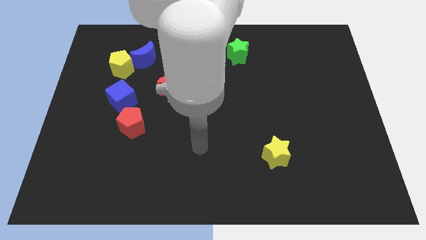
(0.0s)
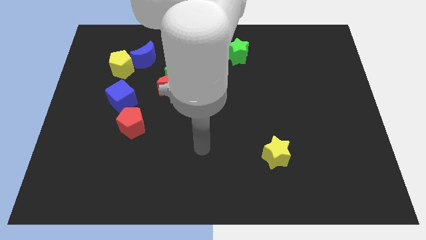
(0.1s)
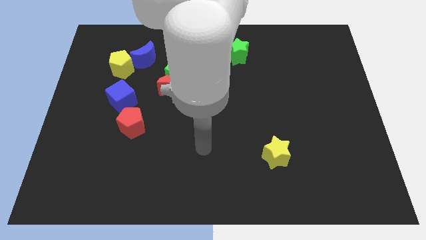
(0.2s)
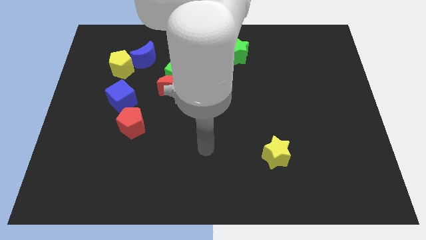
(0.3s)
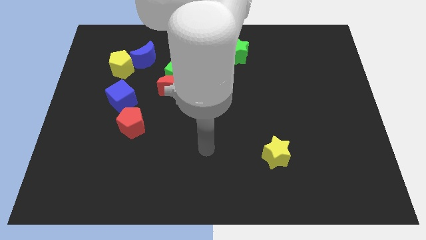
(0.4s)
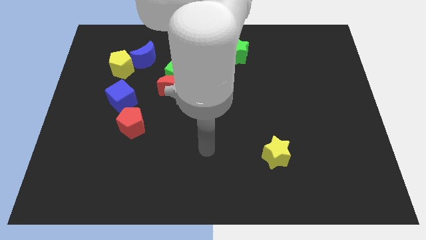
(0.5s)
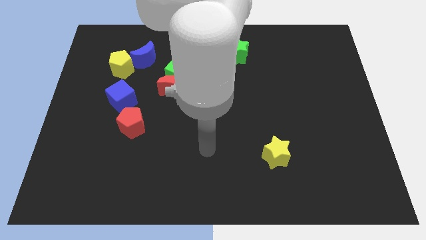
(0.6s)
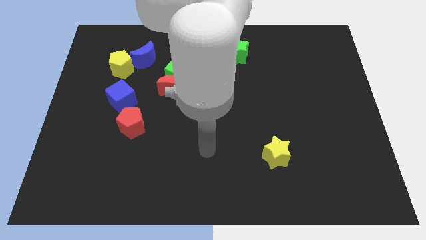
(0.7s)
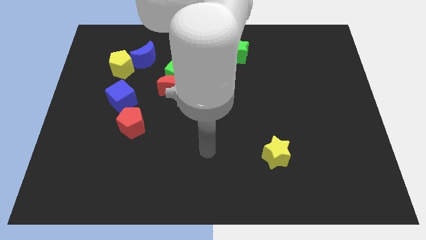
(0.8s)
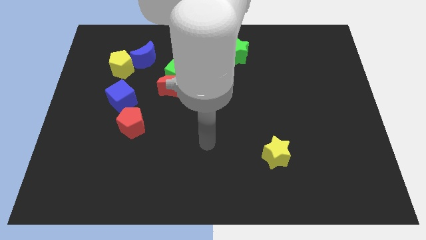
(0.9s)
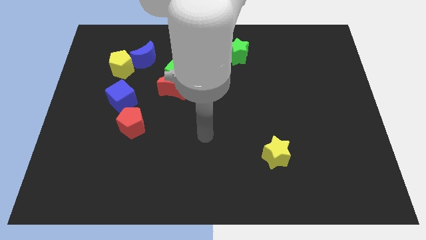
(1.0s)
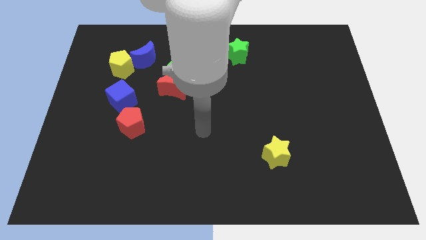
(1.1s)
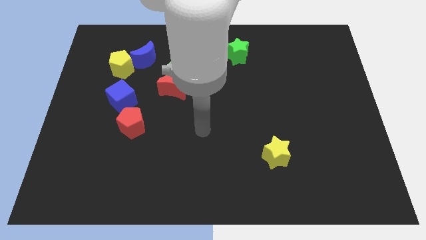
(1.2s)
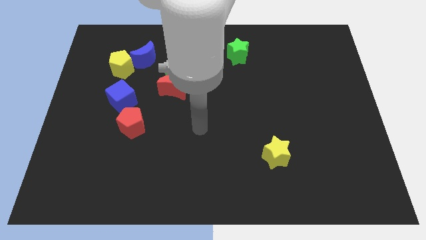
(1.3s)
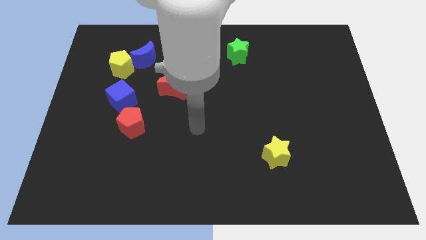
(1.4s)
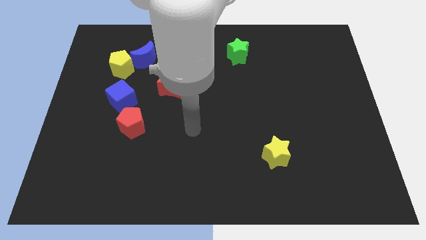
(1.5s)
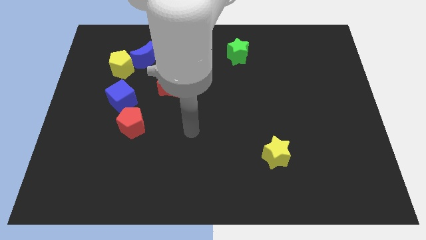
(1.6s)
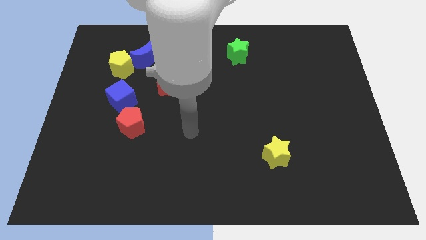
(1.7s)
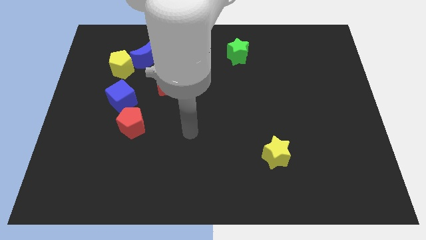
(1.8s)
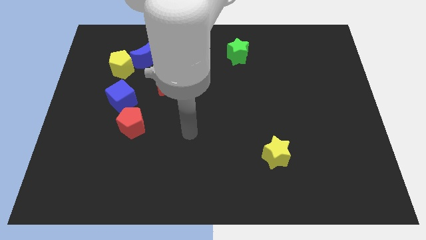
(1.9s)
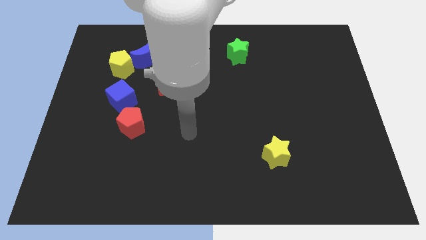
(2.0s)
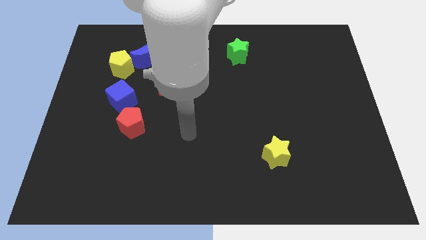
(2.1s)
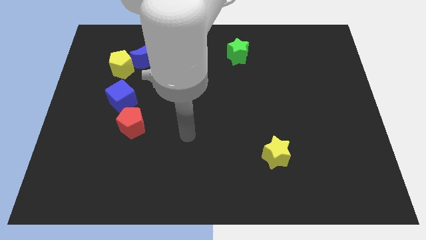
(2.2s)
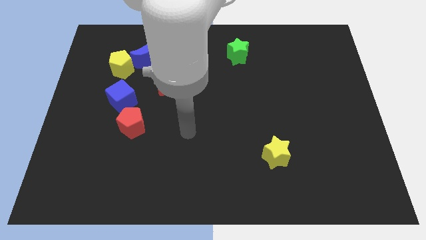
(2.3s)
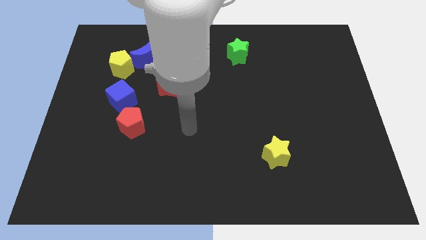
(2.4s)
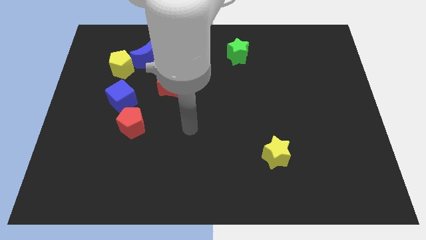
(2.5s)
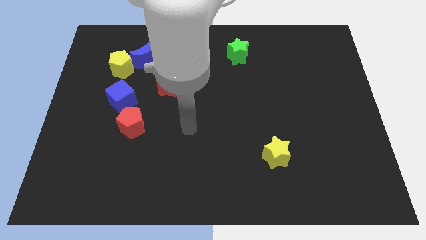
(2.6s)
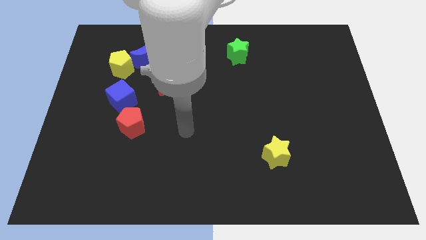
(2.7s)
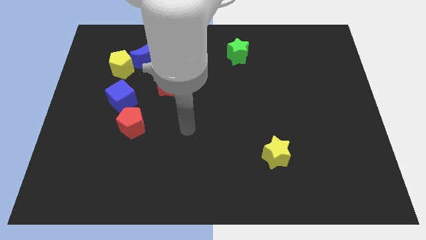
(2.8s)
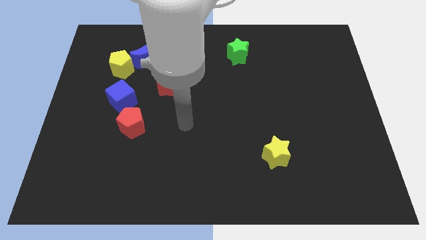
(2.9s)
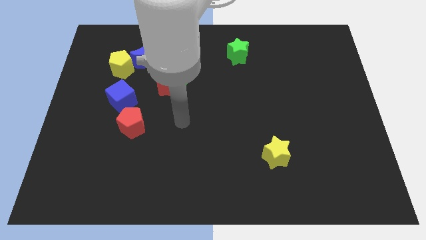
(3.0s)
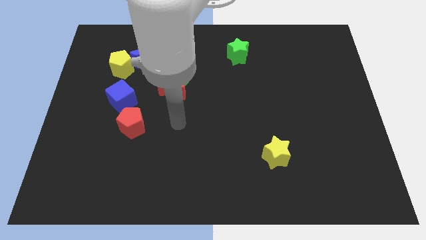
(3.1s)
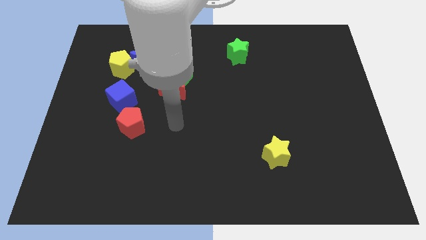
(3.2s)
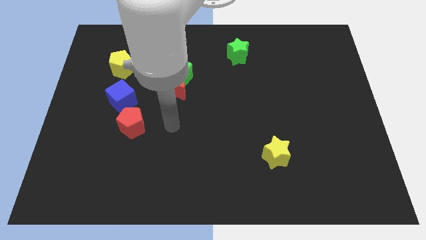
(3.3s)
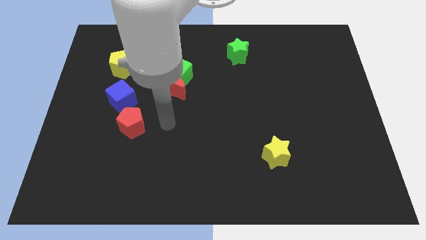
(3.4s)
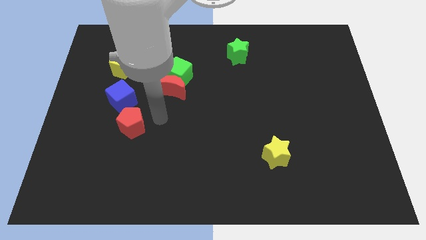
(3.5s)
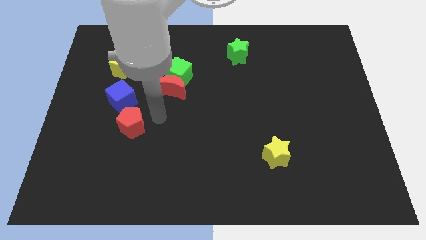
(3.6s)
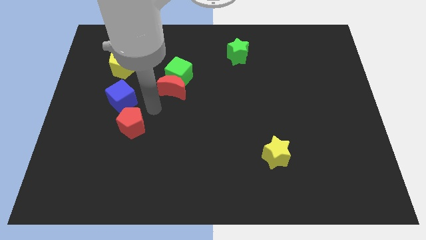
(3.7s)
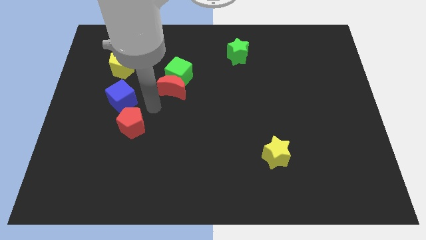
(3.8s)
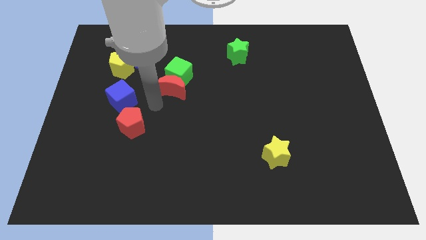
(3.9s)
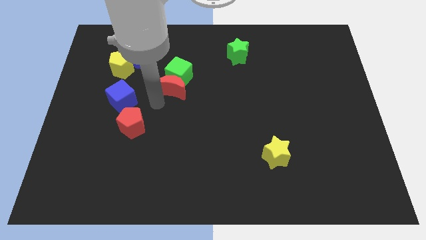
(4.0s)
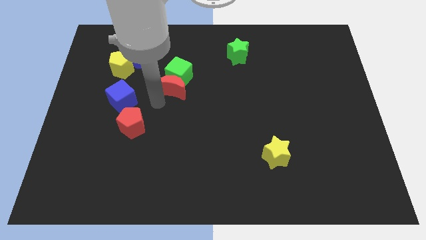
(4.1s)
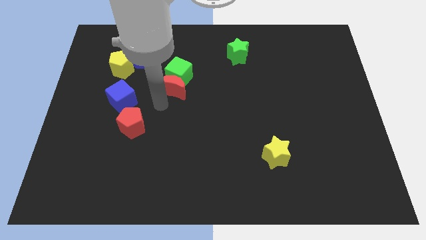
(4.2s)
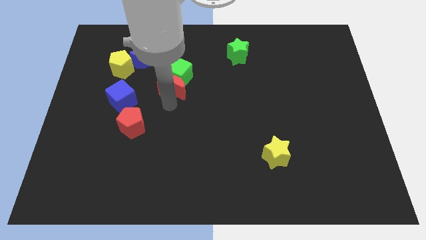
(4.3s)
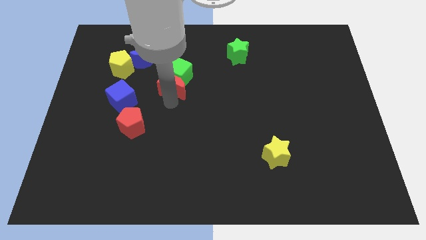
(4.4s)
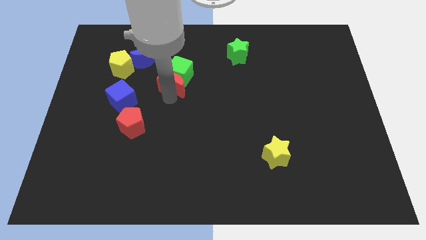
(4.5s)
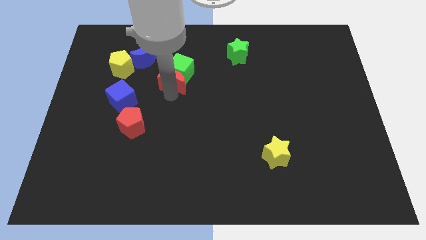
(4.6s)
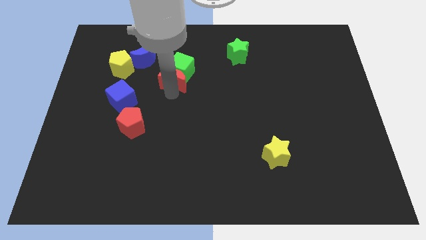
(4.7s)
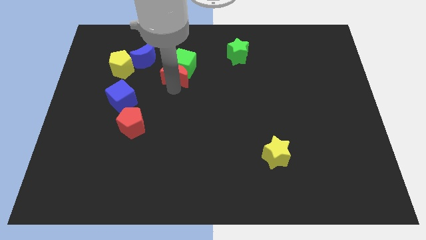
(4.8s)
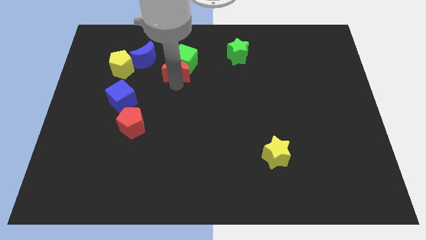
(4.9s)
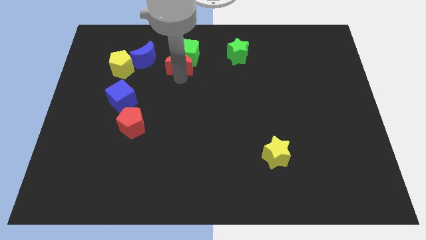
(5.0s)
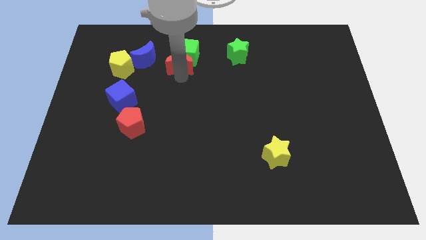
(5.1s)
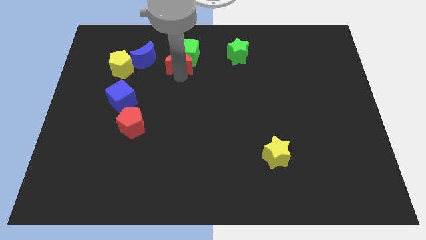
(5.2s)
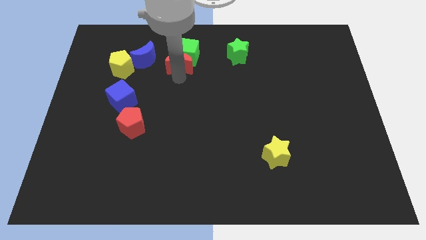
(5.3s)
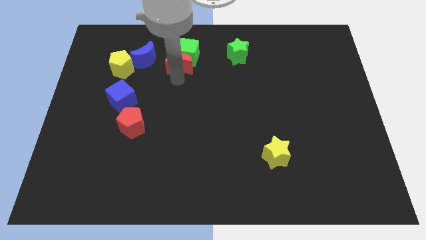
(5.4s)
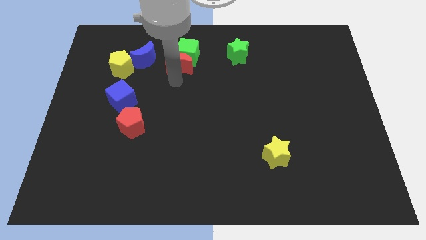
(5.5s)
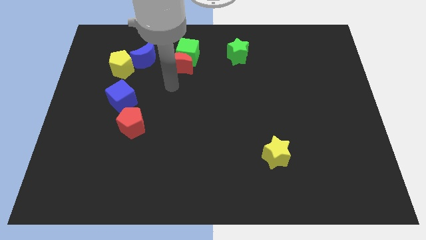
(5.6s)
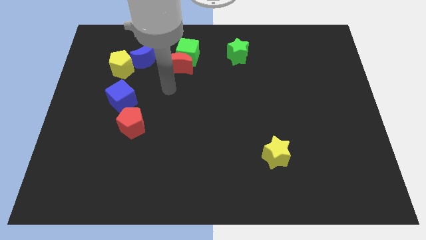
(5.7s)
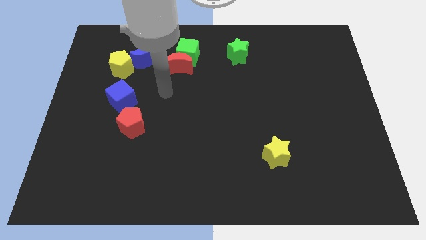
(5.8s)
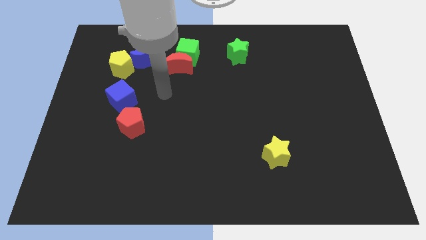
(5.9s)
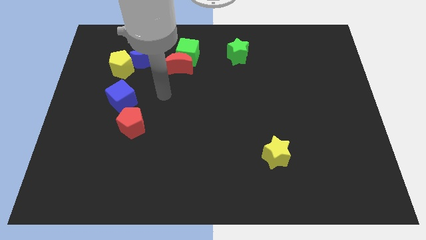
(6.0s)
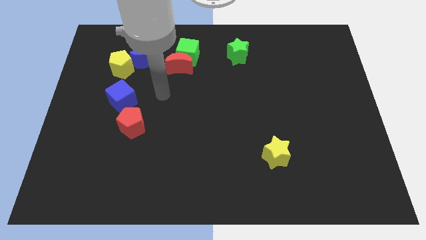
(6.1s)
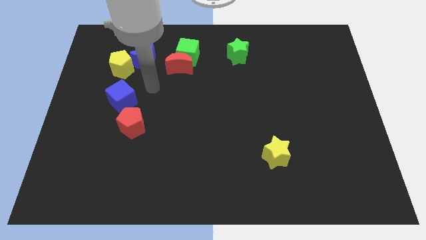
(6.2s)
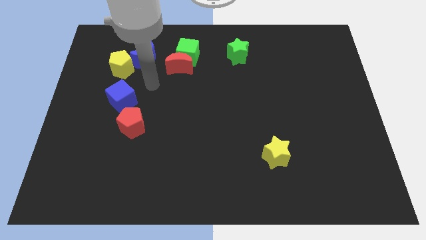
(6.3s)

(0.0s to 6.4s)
push red moon into the green cube

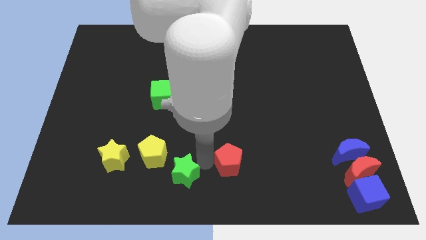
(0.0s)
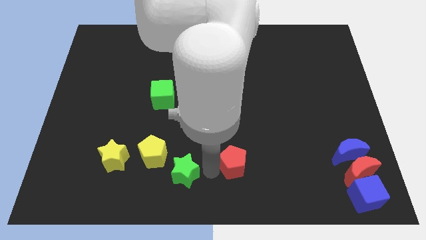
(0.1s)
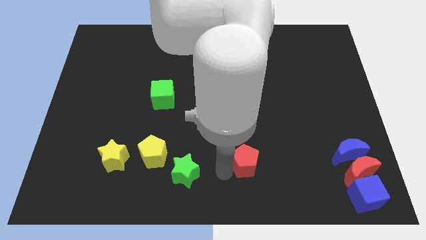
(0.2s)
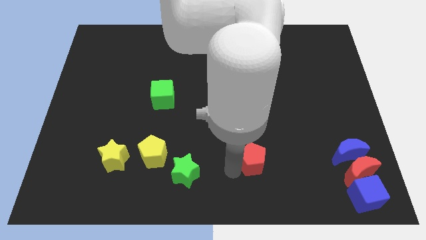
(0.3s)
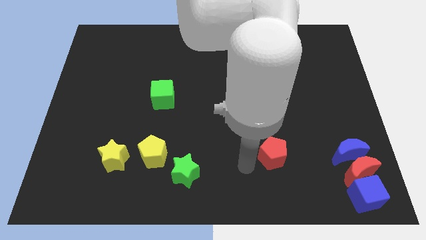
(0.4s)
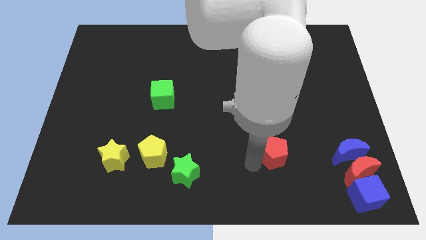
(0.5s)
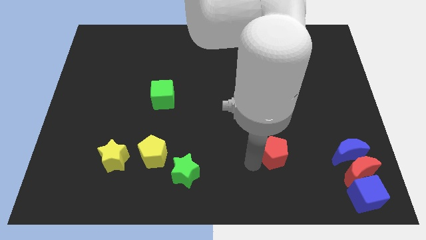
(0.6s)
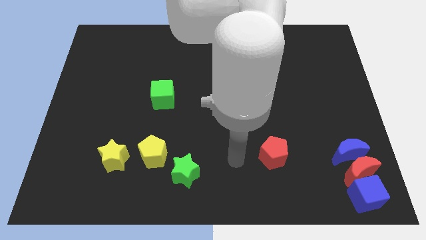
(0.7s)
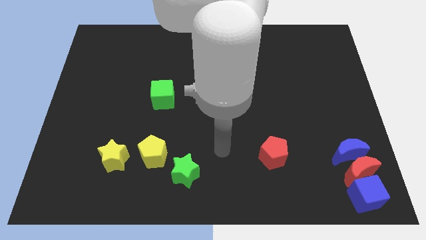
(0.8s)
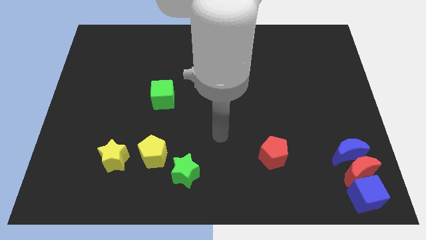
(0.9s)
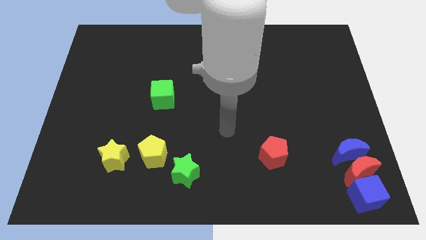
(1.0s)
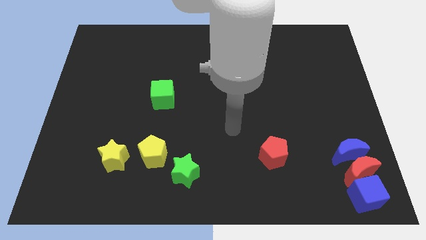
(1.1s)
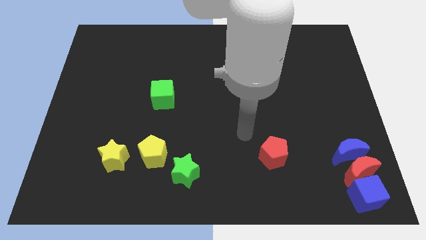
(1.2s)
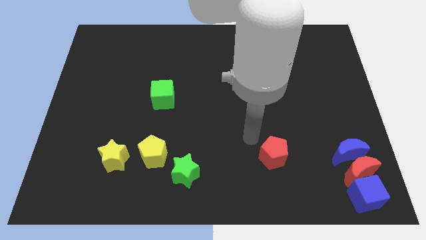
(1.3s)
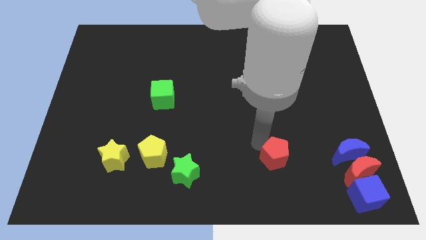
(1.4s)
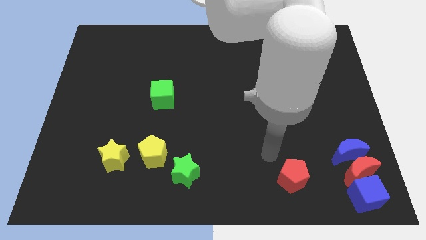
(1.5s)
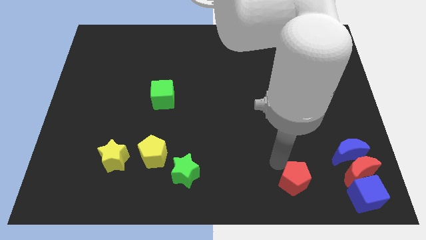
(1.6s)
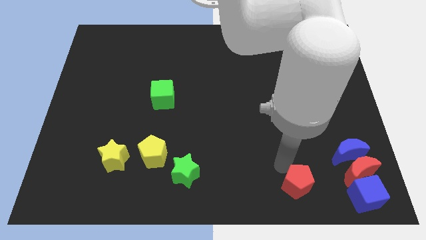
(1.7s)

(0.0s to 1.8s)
move the red pentagon to the left of the red crescent

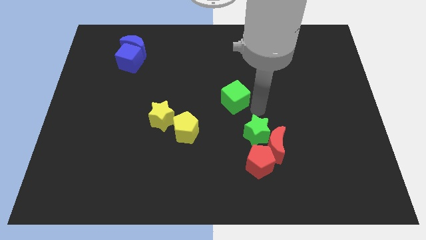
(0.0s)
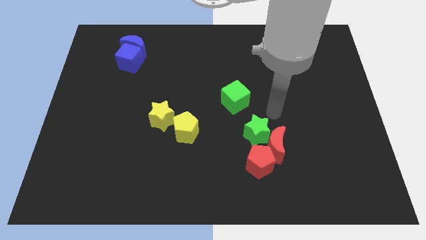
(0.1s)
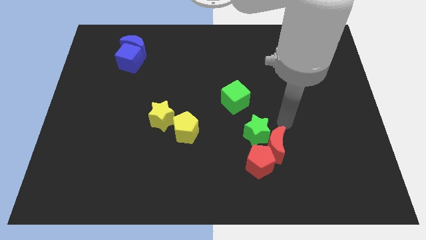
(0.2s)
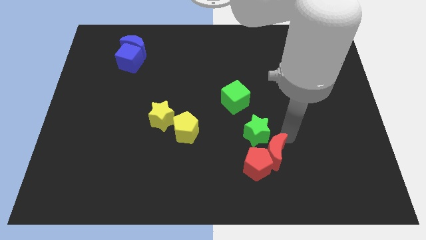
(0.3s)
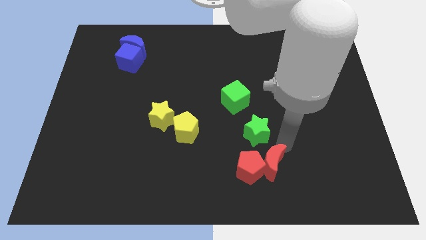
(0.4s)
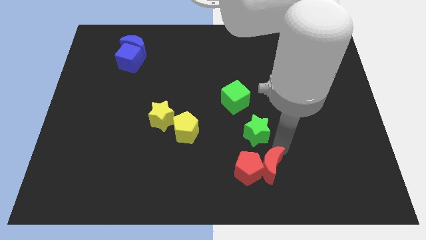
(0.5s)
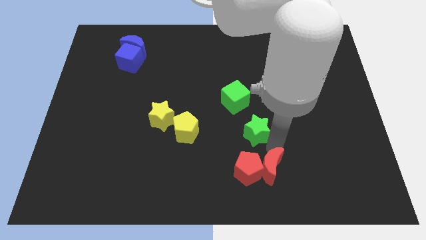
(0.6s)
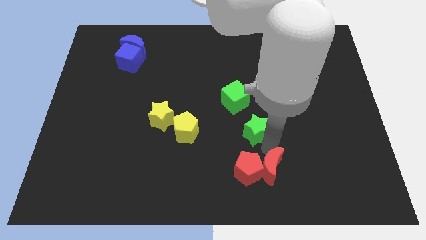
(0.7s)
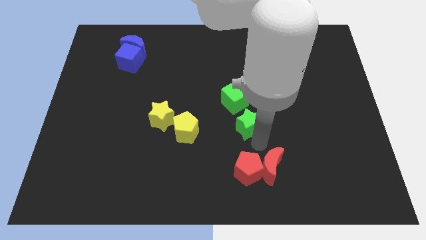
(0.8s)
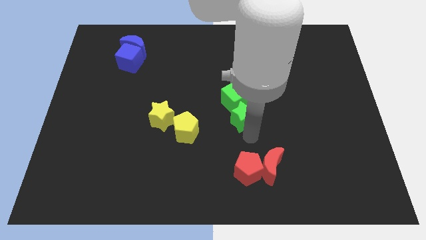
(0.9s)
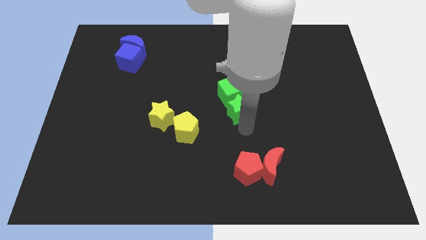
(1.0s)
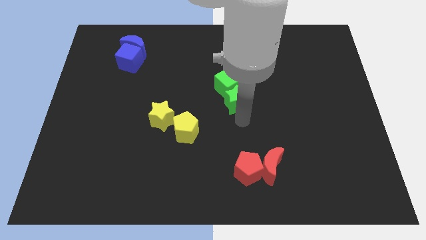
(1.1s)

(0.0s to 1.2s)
move red pebtagon with the help of red crescent
